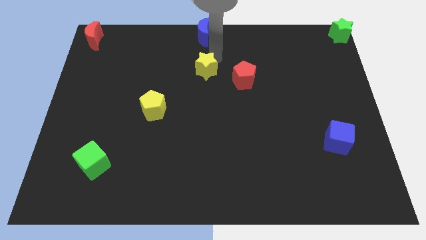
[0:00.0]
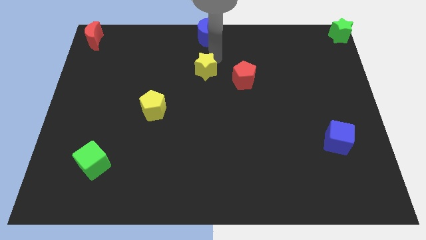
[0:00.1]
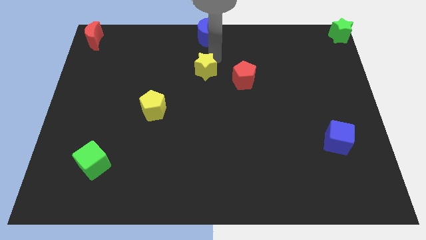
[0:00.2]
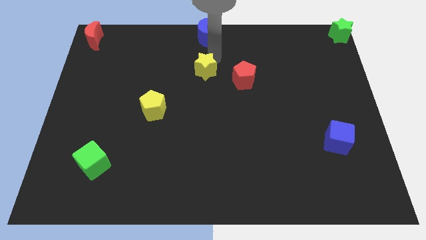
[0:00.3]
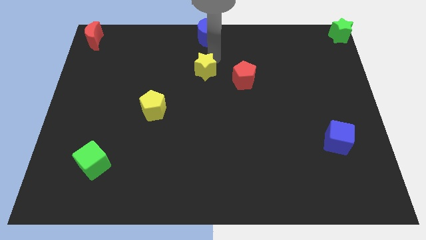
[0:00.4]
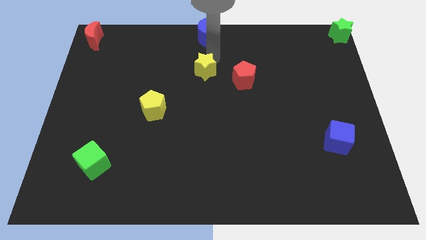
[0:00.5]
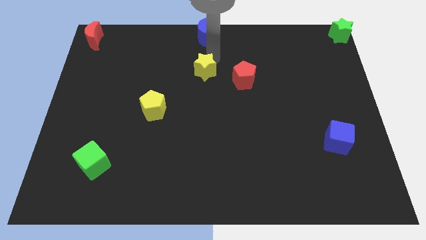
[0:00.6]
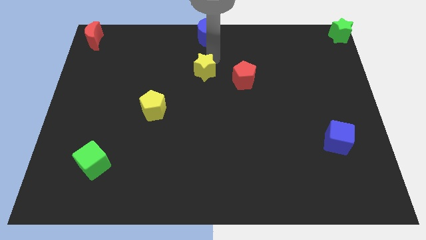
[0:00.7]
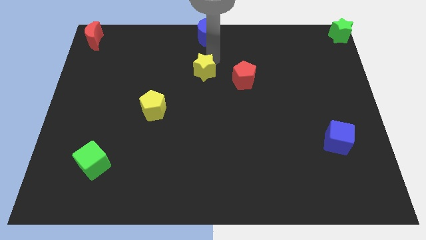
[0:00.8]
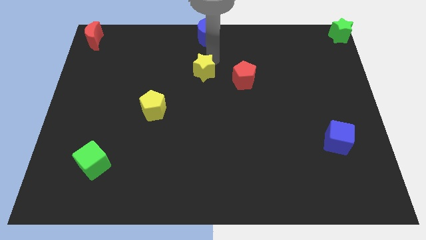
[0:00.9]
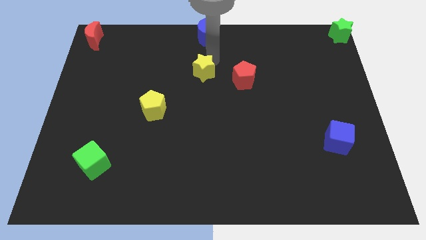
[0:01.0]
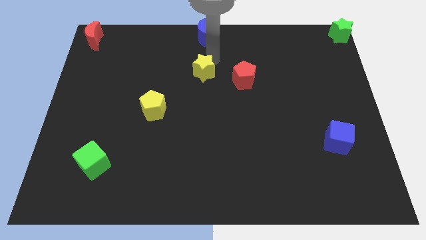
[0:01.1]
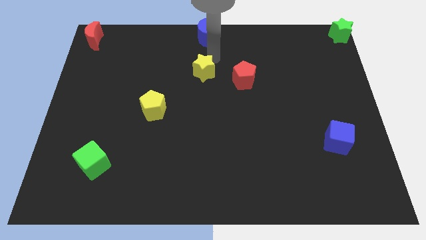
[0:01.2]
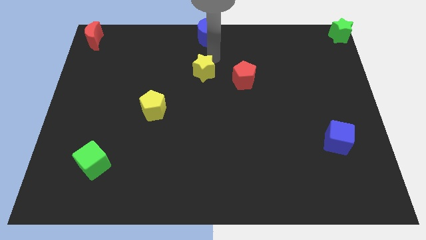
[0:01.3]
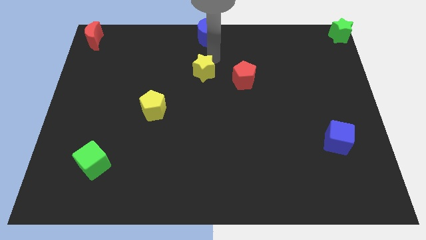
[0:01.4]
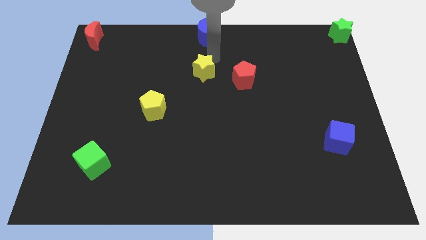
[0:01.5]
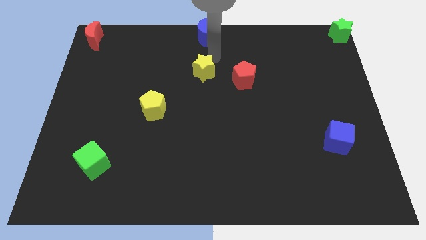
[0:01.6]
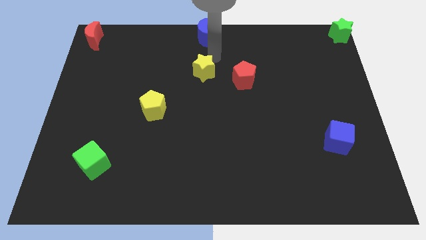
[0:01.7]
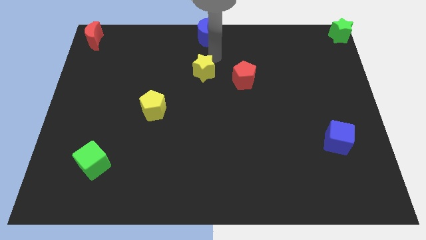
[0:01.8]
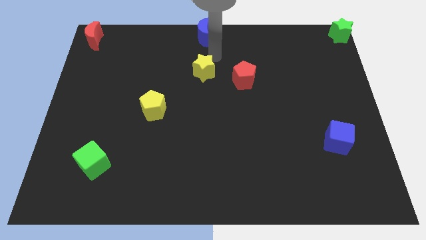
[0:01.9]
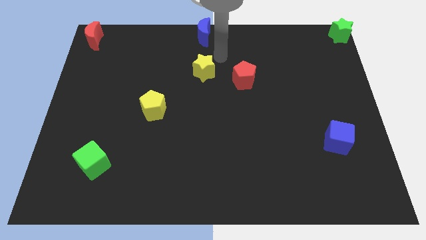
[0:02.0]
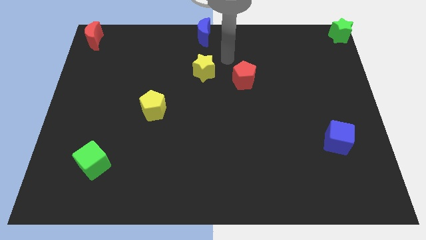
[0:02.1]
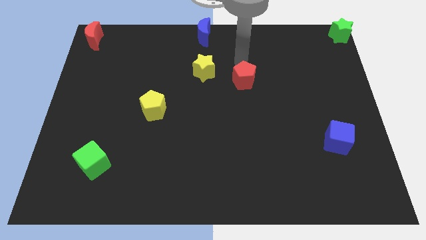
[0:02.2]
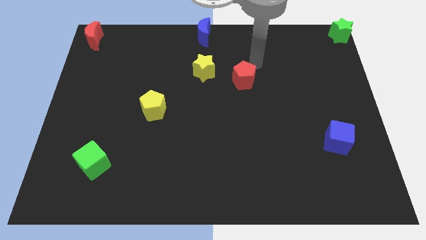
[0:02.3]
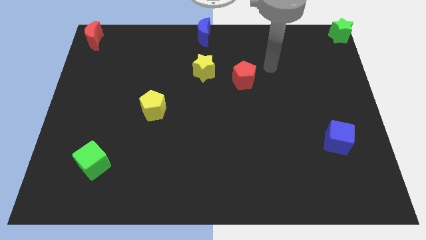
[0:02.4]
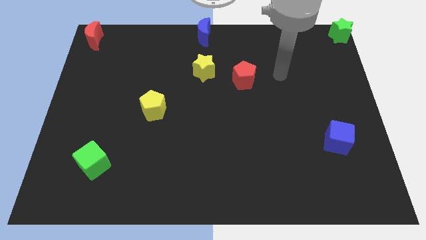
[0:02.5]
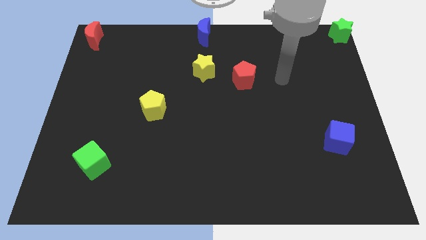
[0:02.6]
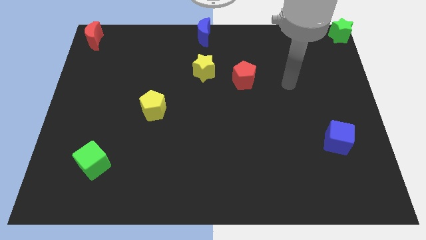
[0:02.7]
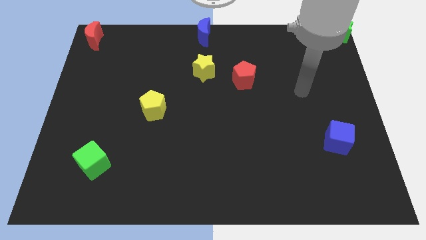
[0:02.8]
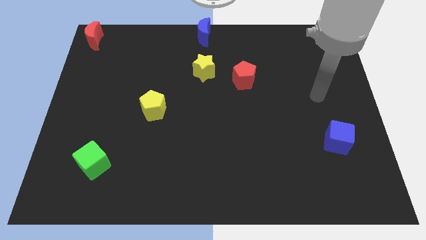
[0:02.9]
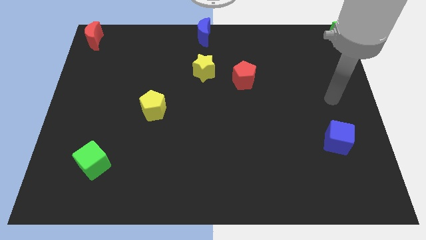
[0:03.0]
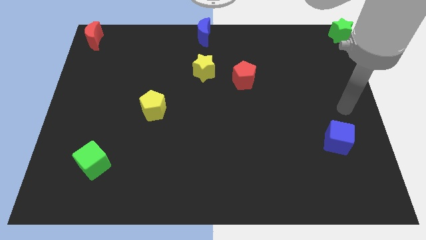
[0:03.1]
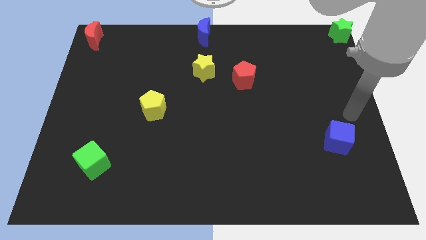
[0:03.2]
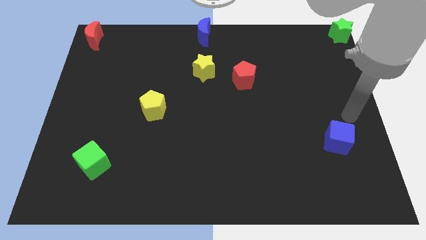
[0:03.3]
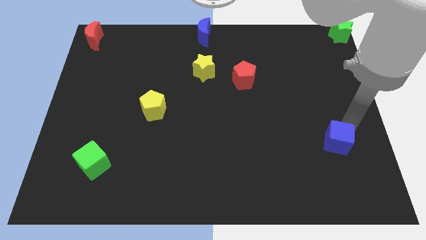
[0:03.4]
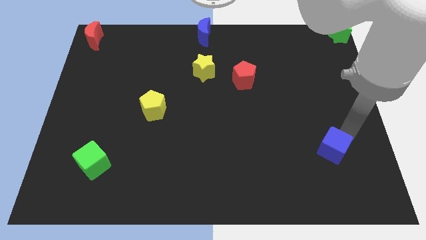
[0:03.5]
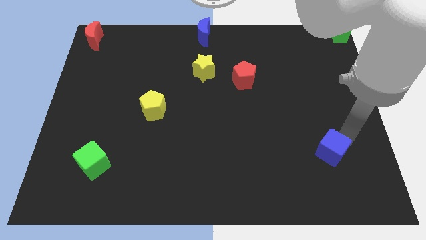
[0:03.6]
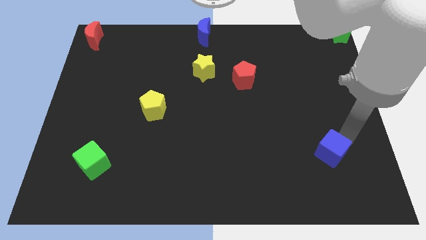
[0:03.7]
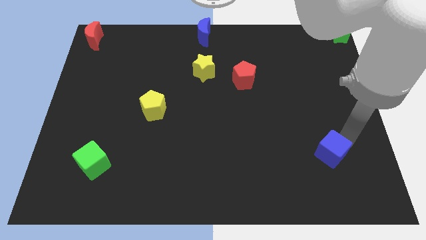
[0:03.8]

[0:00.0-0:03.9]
move the arm towards the blue cube

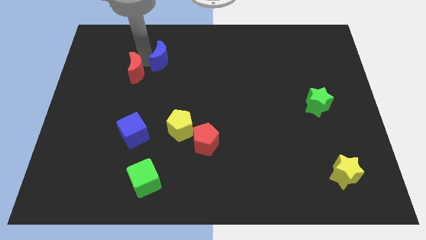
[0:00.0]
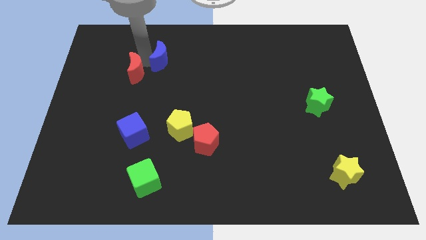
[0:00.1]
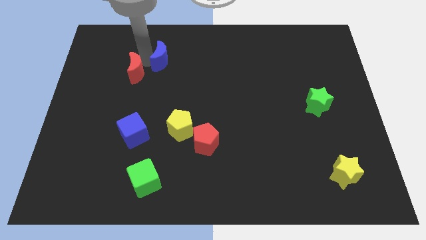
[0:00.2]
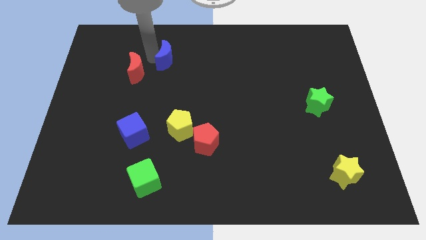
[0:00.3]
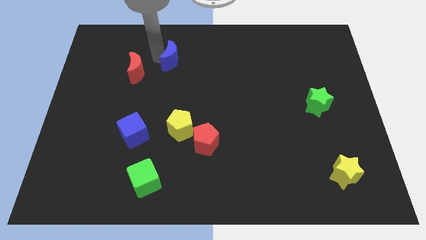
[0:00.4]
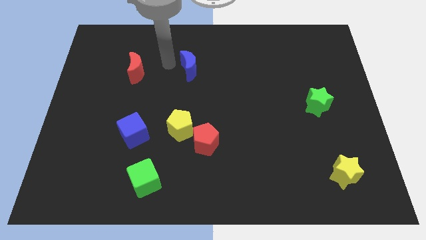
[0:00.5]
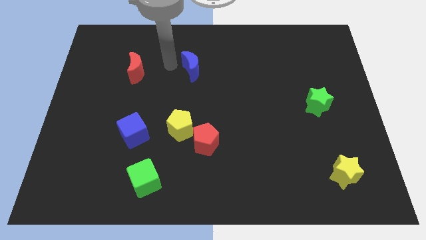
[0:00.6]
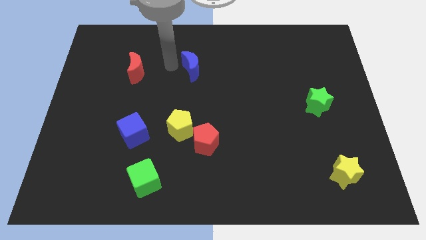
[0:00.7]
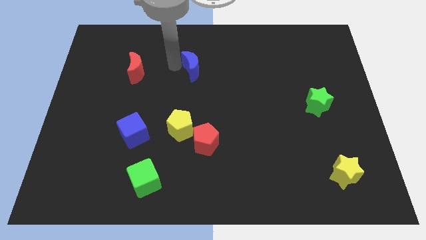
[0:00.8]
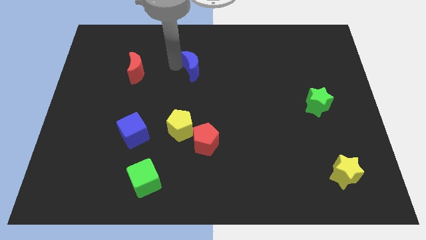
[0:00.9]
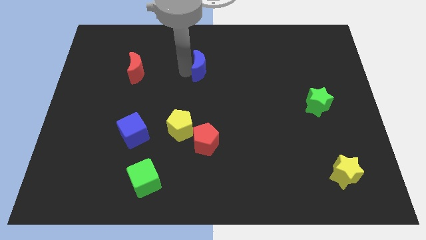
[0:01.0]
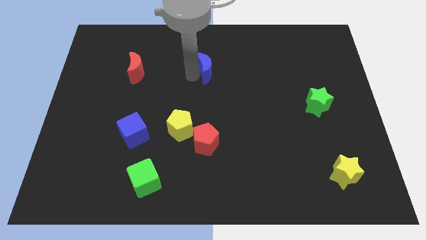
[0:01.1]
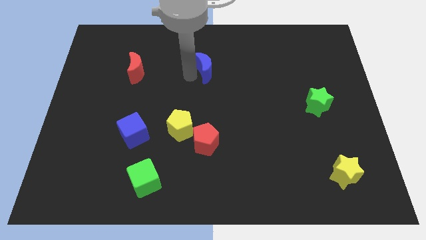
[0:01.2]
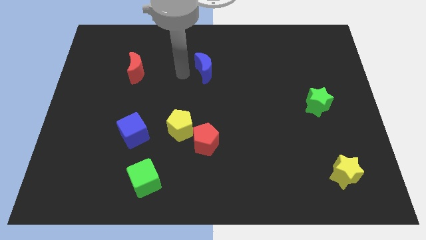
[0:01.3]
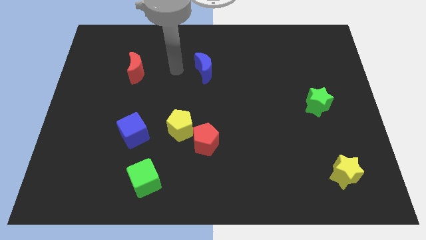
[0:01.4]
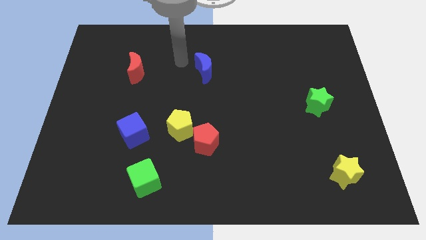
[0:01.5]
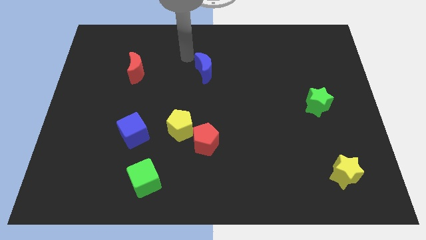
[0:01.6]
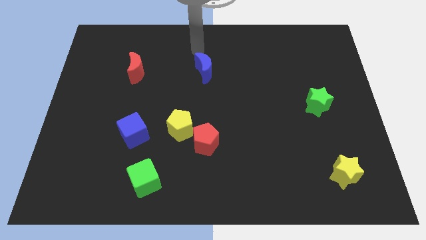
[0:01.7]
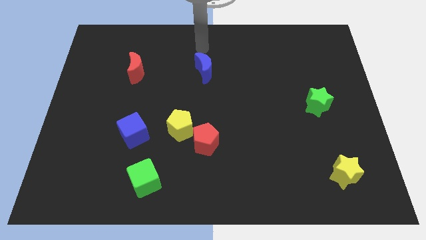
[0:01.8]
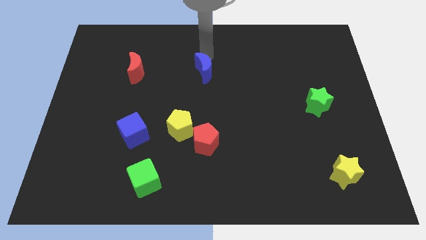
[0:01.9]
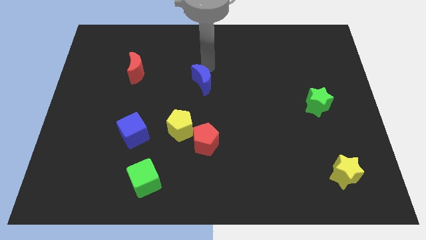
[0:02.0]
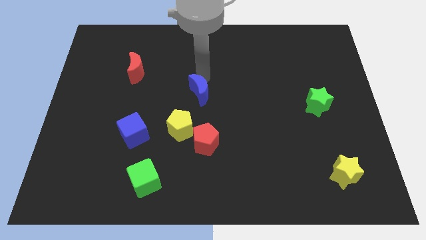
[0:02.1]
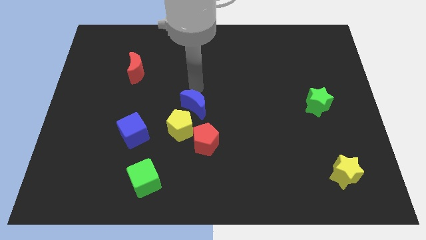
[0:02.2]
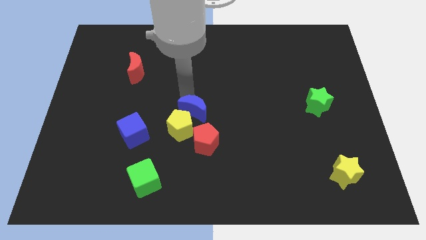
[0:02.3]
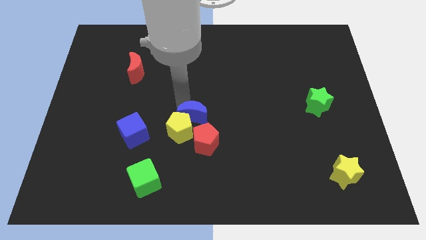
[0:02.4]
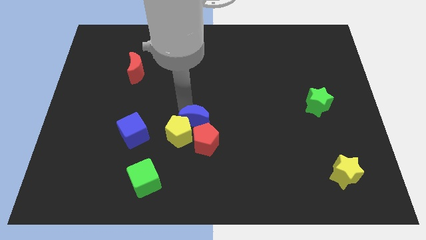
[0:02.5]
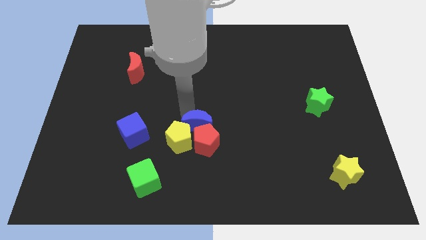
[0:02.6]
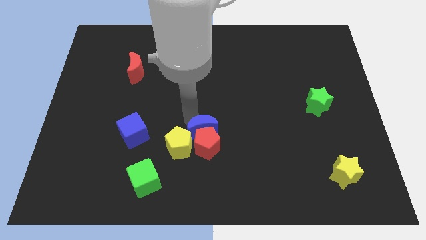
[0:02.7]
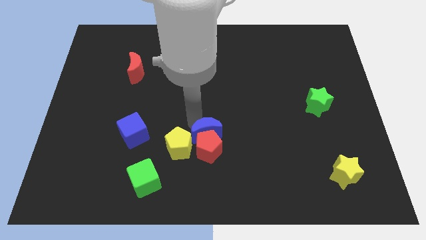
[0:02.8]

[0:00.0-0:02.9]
move blue moon into red pentagon

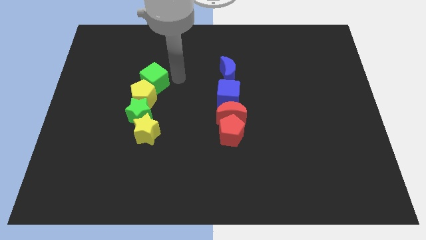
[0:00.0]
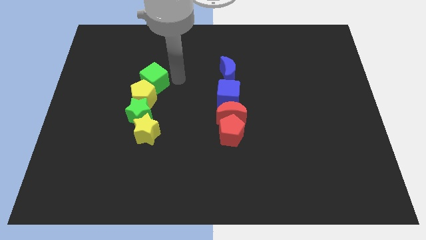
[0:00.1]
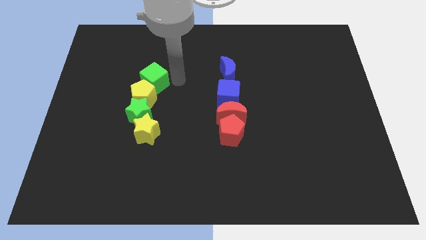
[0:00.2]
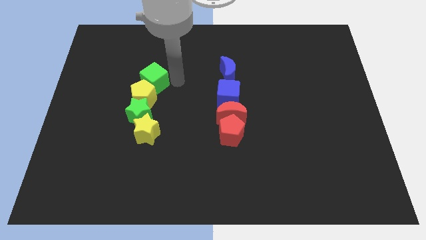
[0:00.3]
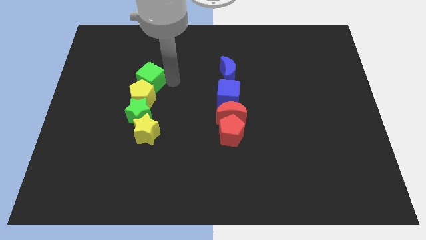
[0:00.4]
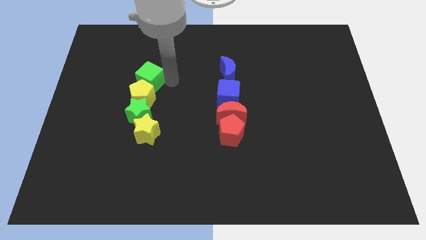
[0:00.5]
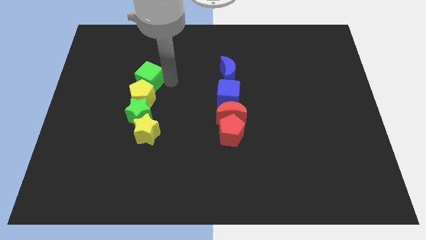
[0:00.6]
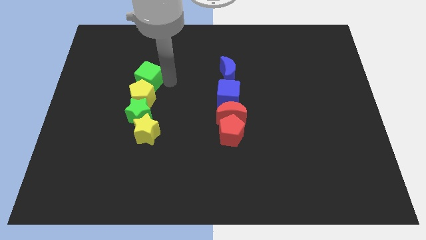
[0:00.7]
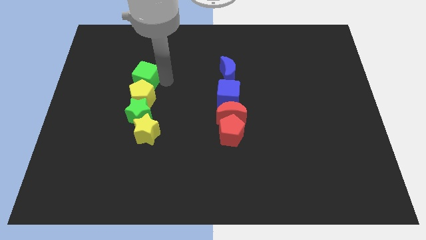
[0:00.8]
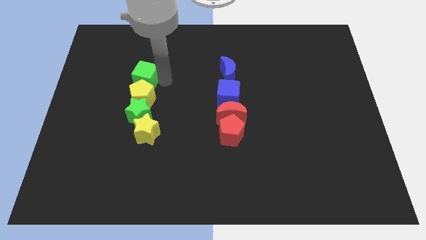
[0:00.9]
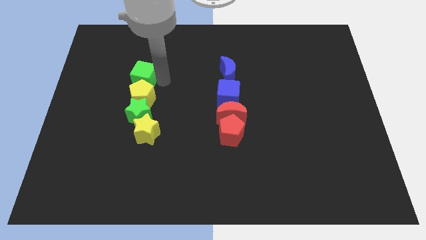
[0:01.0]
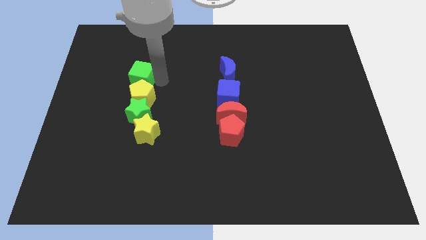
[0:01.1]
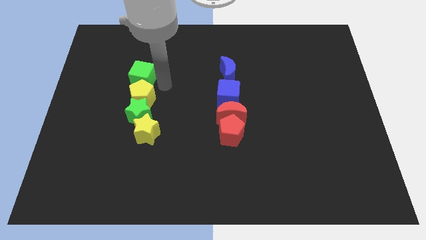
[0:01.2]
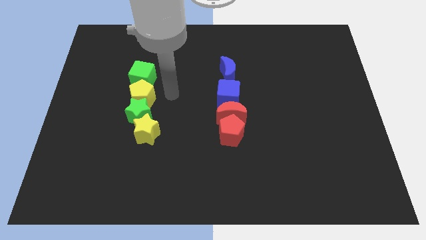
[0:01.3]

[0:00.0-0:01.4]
push the green cube slightly to the left

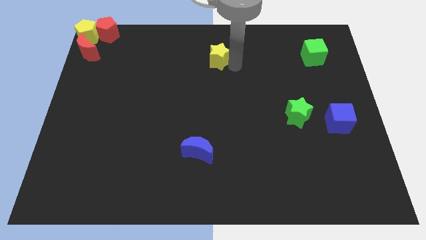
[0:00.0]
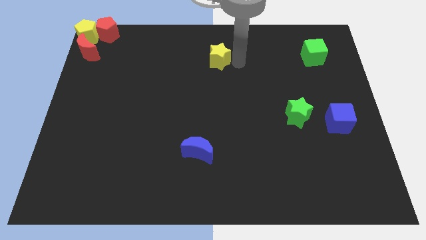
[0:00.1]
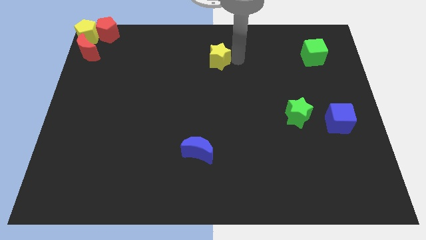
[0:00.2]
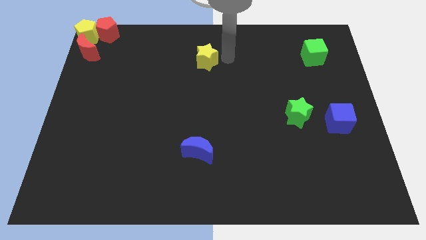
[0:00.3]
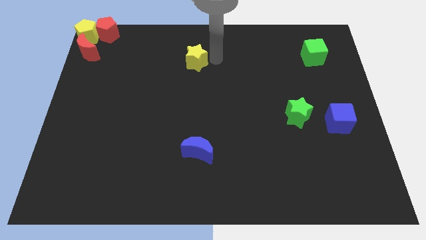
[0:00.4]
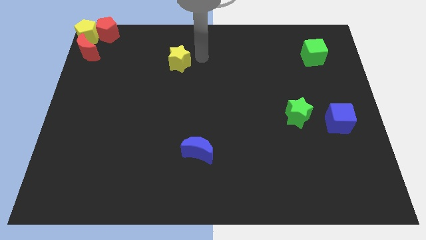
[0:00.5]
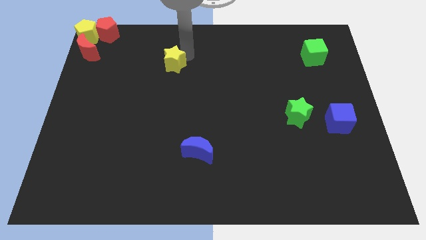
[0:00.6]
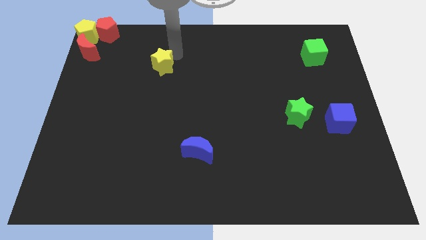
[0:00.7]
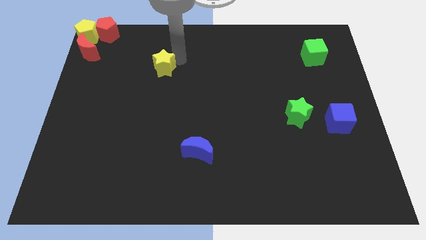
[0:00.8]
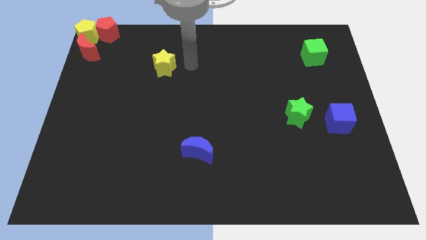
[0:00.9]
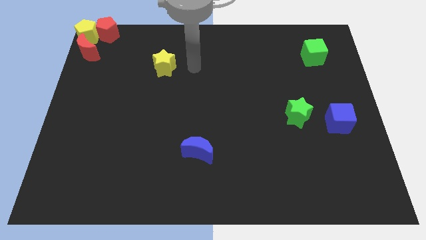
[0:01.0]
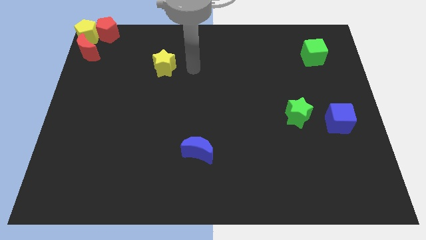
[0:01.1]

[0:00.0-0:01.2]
push the yellow star to the left
